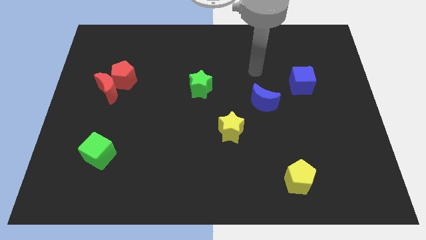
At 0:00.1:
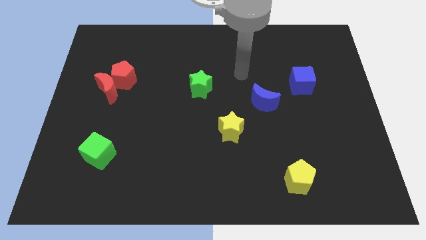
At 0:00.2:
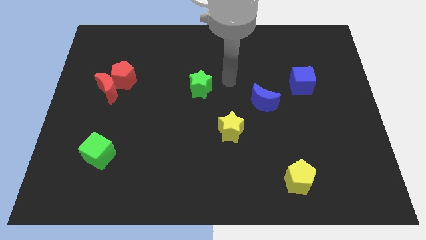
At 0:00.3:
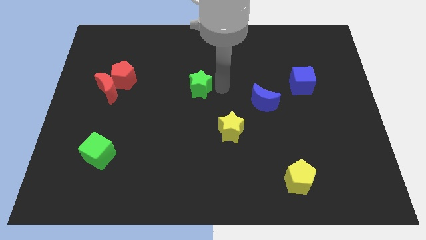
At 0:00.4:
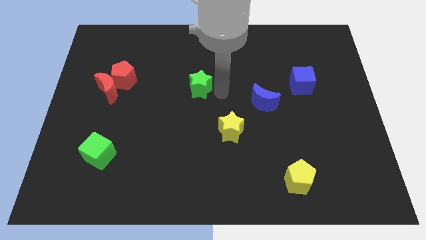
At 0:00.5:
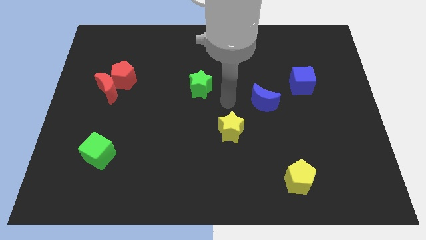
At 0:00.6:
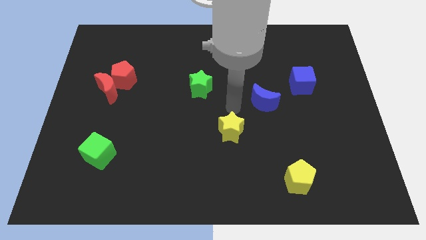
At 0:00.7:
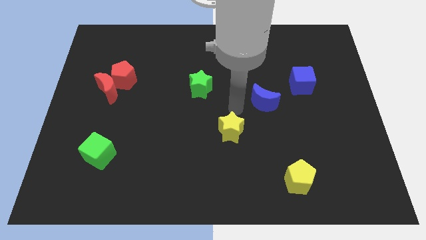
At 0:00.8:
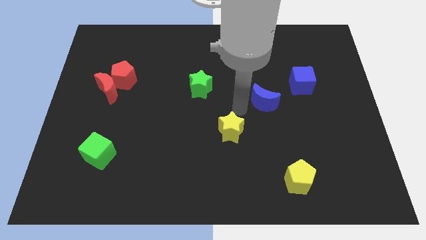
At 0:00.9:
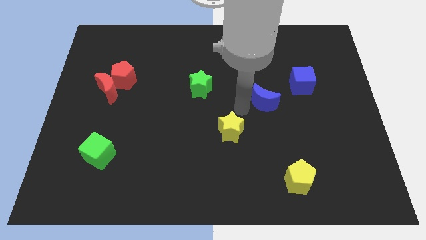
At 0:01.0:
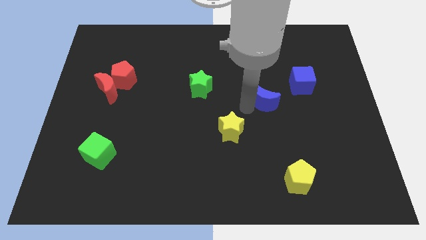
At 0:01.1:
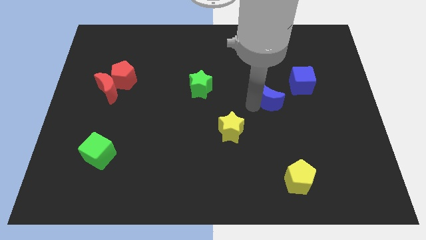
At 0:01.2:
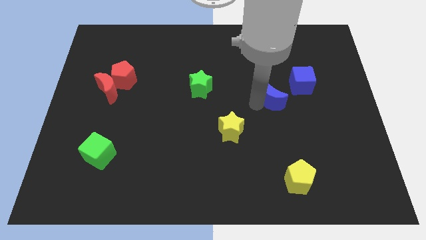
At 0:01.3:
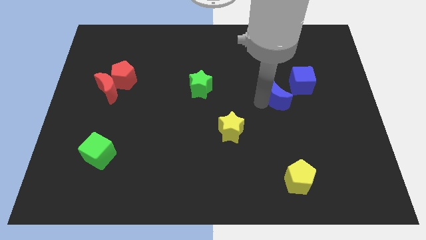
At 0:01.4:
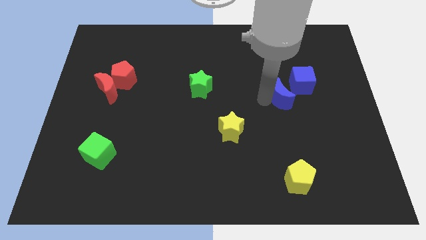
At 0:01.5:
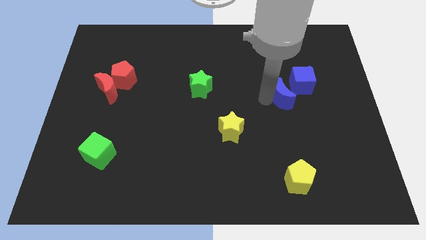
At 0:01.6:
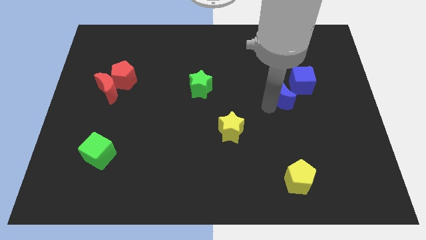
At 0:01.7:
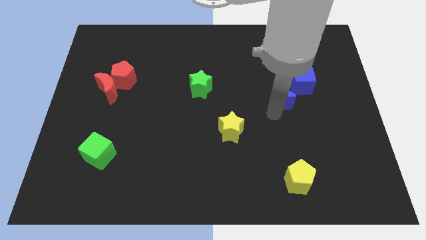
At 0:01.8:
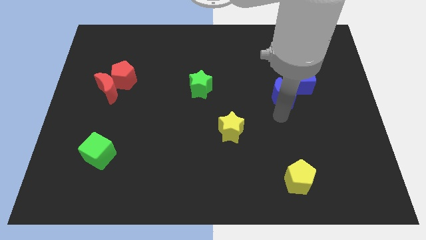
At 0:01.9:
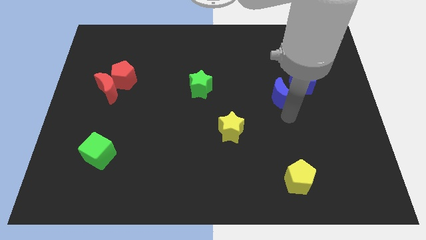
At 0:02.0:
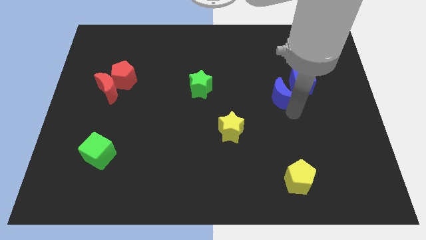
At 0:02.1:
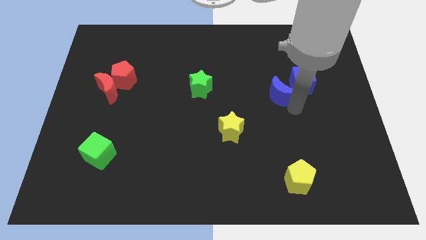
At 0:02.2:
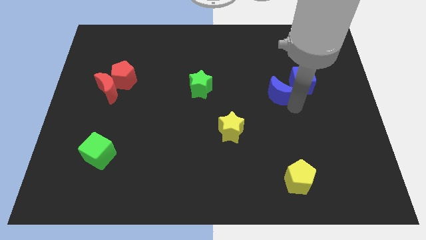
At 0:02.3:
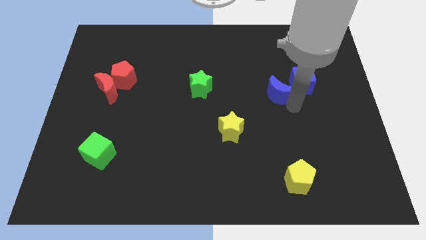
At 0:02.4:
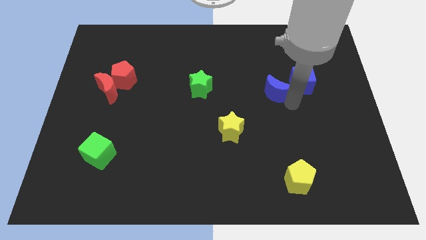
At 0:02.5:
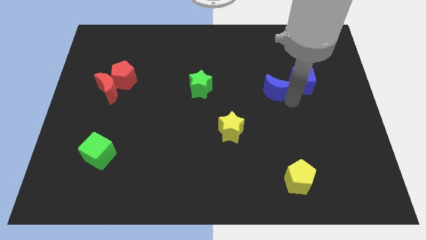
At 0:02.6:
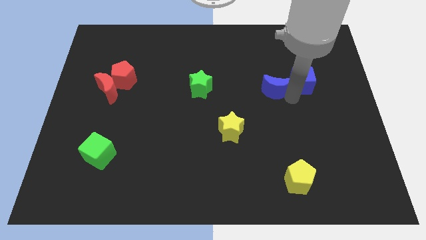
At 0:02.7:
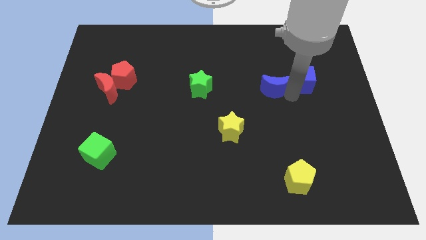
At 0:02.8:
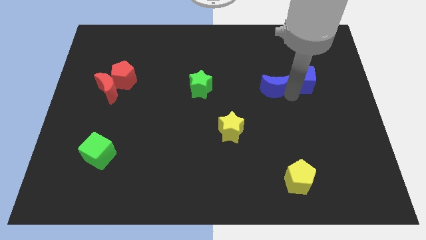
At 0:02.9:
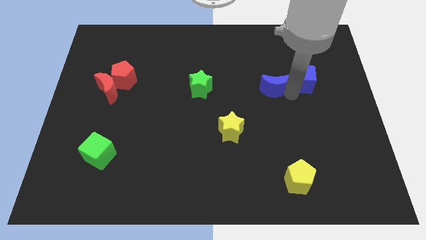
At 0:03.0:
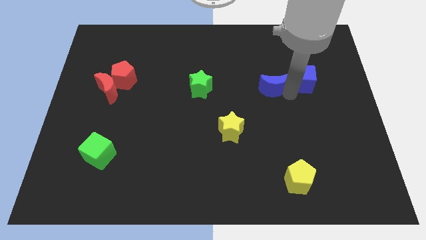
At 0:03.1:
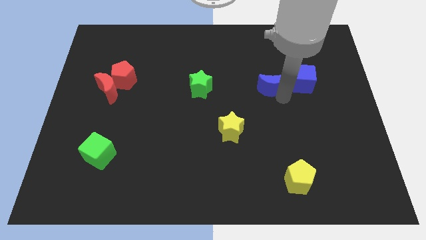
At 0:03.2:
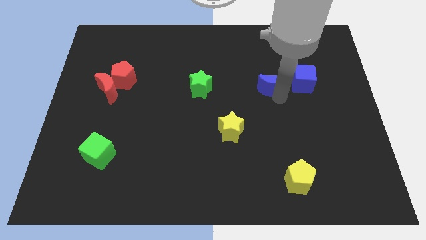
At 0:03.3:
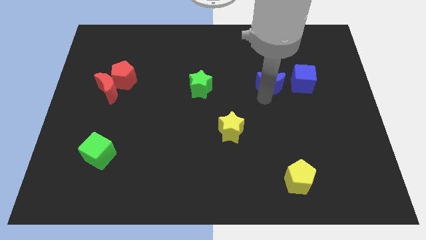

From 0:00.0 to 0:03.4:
place blue moon to the left of blue cube

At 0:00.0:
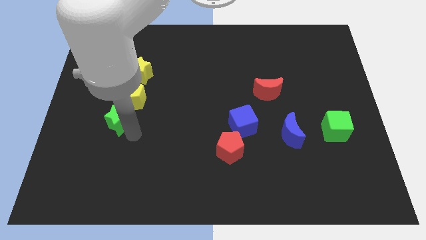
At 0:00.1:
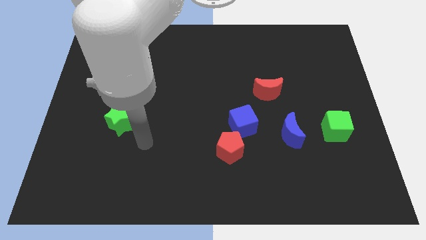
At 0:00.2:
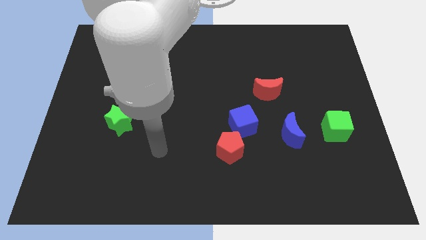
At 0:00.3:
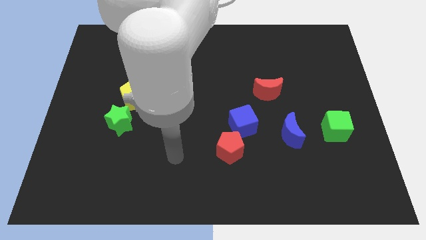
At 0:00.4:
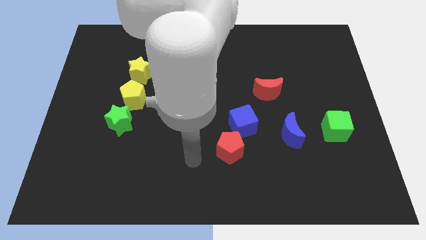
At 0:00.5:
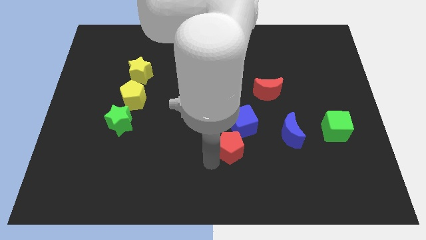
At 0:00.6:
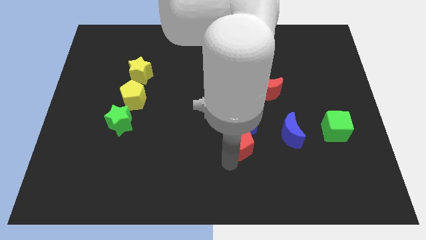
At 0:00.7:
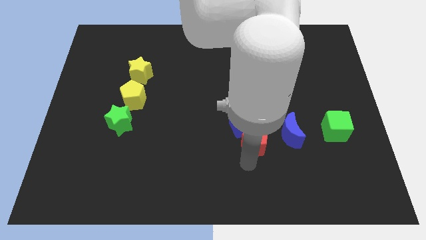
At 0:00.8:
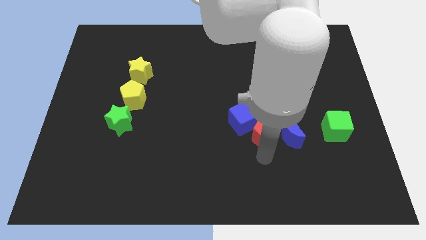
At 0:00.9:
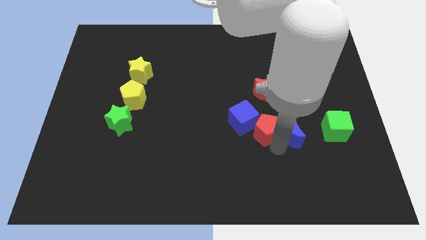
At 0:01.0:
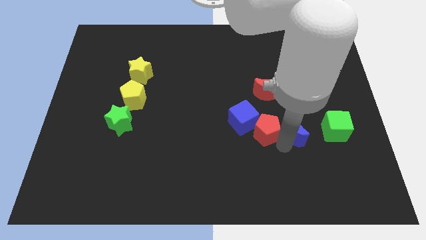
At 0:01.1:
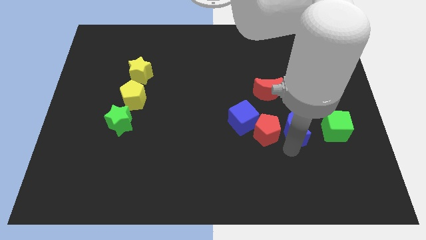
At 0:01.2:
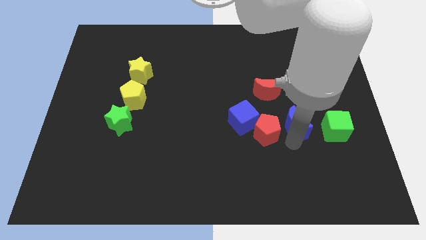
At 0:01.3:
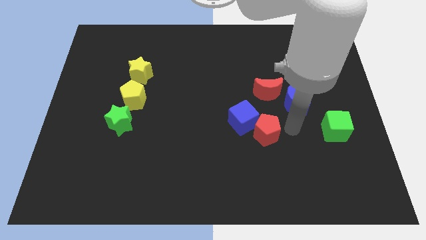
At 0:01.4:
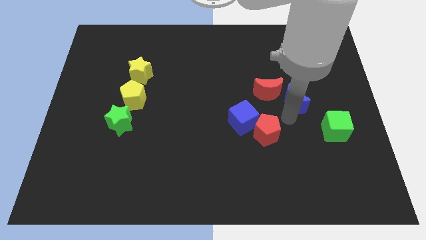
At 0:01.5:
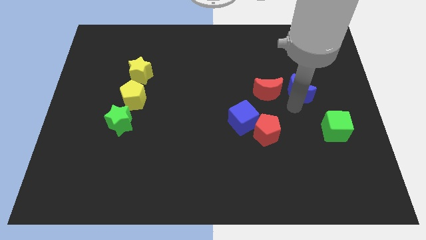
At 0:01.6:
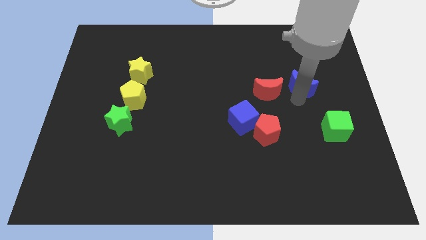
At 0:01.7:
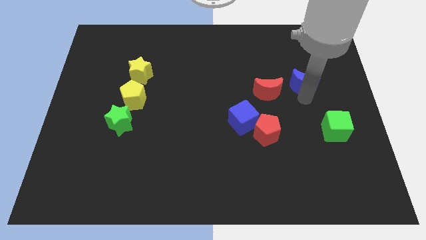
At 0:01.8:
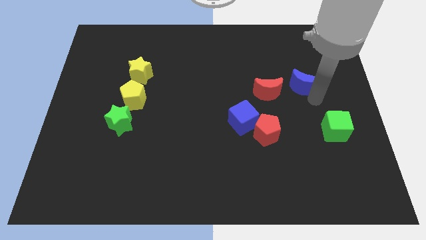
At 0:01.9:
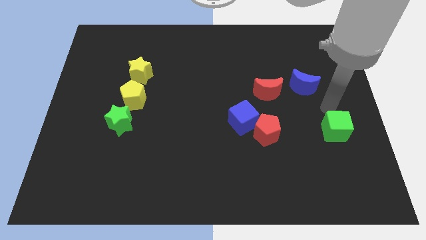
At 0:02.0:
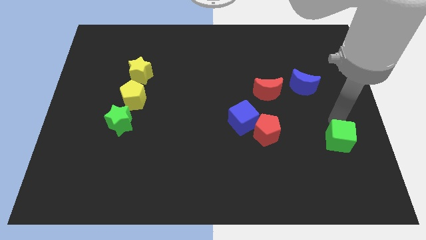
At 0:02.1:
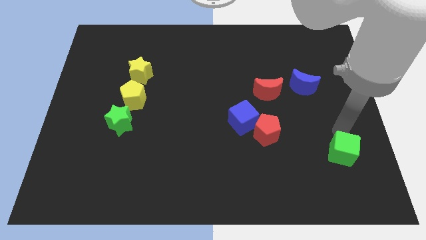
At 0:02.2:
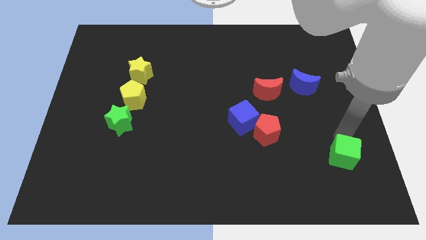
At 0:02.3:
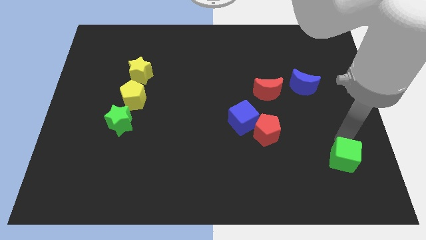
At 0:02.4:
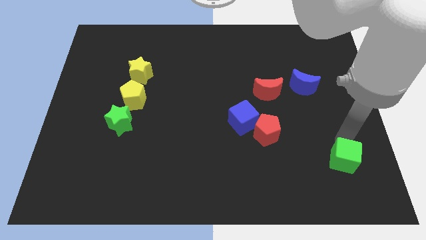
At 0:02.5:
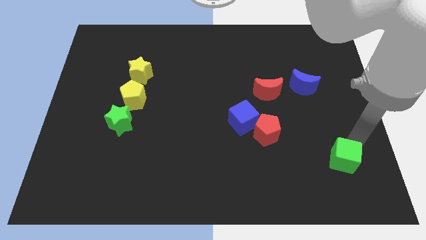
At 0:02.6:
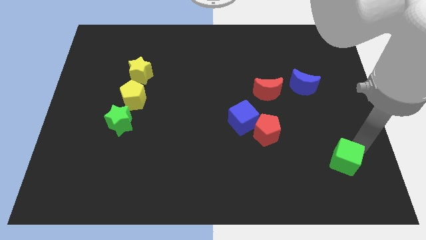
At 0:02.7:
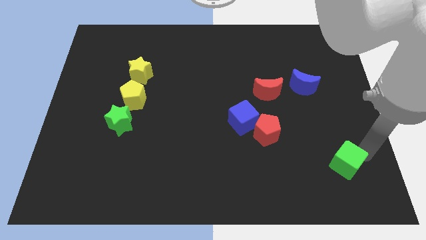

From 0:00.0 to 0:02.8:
move the arm away from the green star

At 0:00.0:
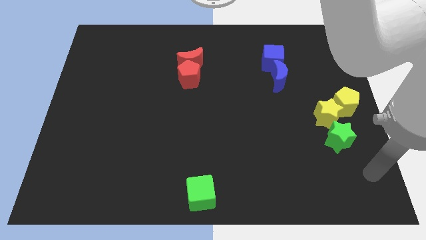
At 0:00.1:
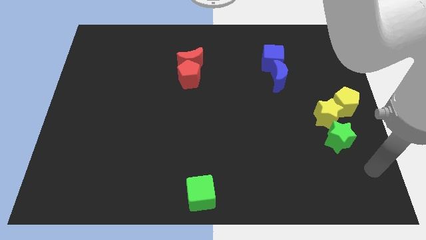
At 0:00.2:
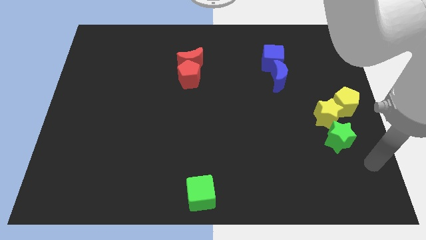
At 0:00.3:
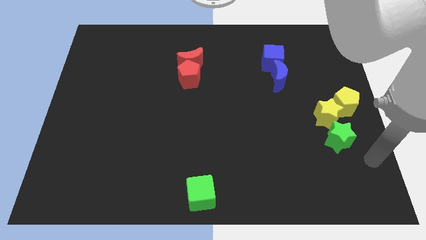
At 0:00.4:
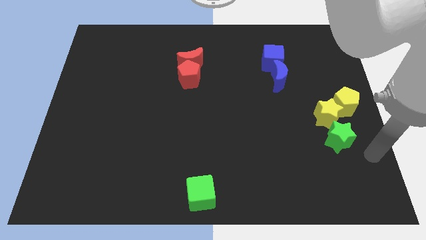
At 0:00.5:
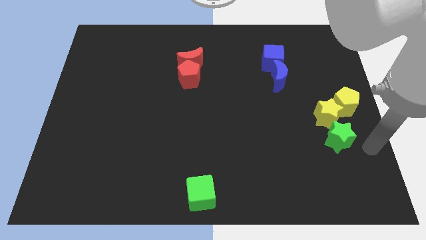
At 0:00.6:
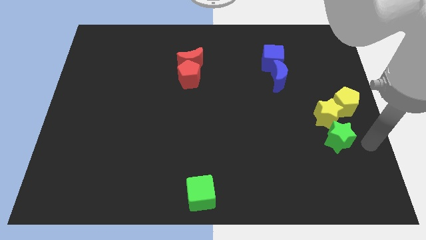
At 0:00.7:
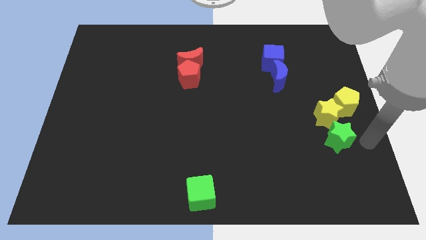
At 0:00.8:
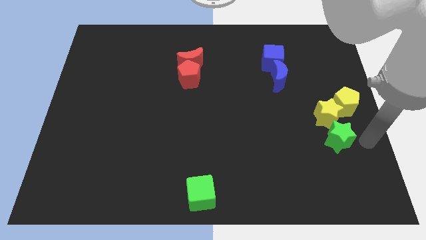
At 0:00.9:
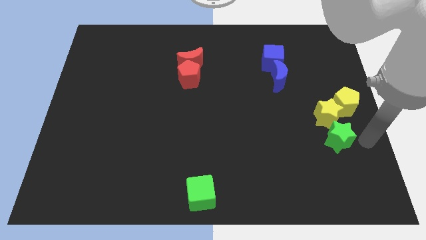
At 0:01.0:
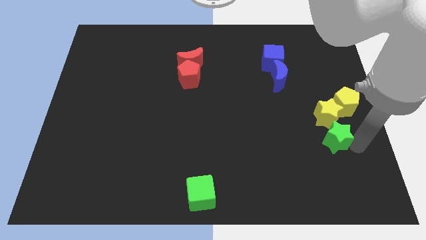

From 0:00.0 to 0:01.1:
move your arm to the right of green star

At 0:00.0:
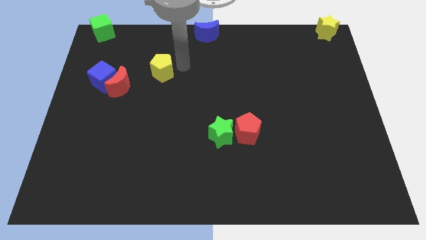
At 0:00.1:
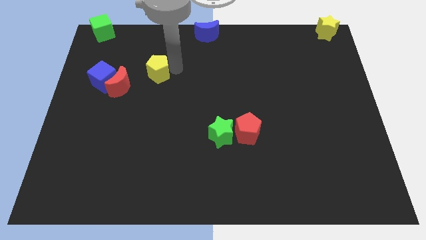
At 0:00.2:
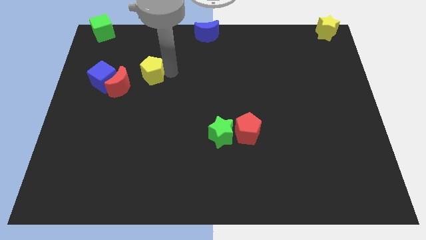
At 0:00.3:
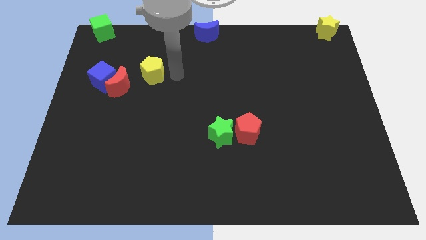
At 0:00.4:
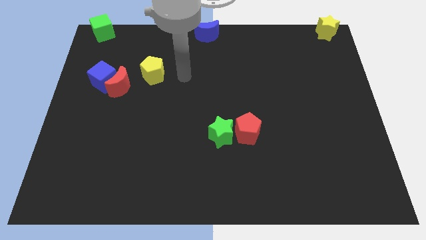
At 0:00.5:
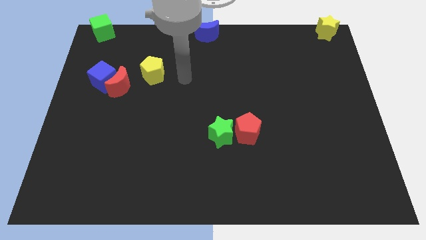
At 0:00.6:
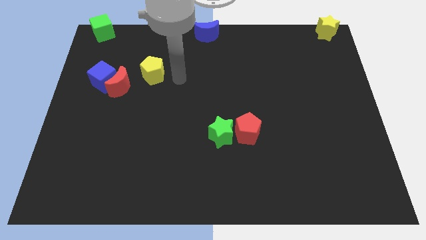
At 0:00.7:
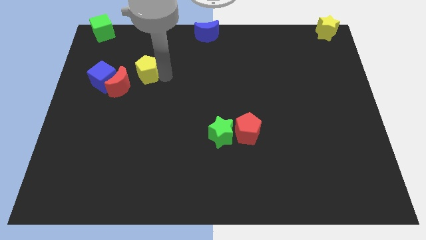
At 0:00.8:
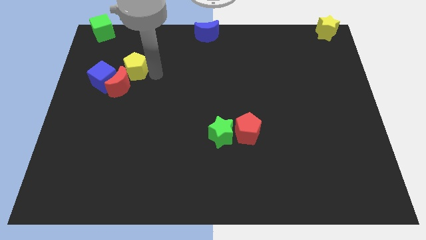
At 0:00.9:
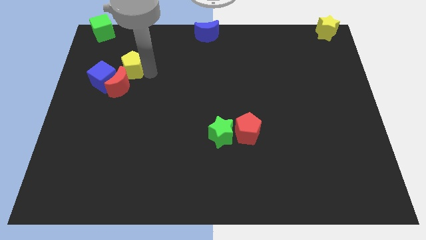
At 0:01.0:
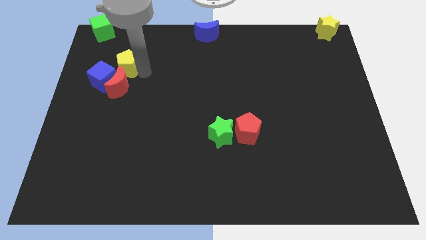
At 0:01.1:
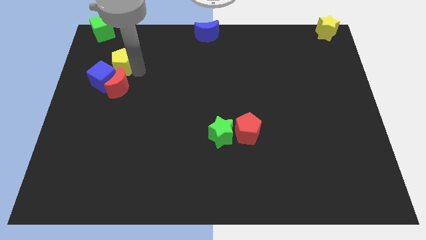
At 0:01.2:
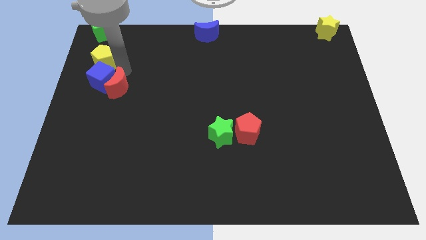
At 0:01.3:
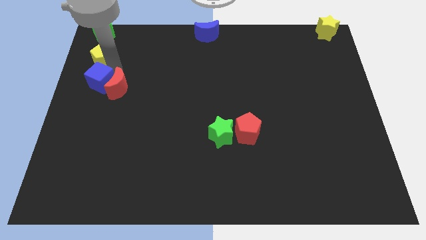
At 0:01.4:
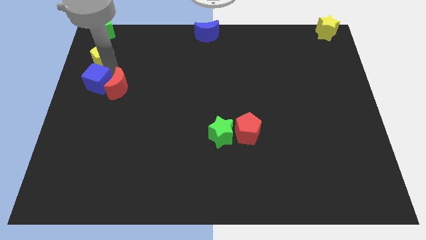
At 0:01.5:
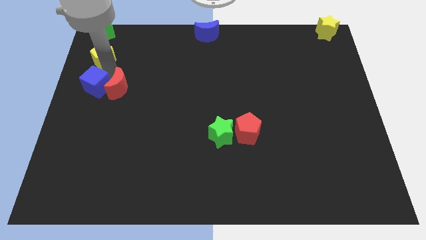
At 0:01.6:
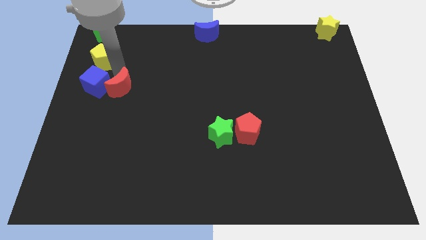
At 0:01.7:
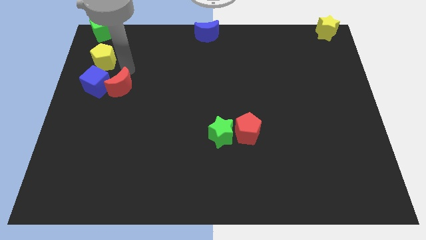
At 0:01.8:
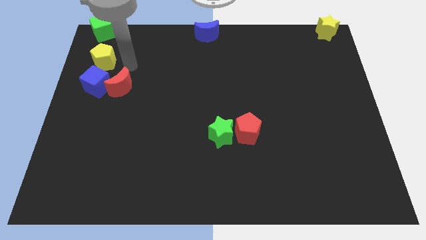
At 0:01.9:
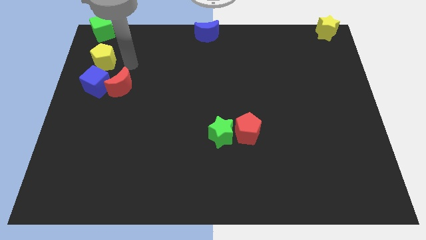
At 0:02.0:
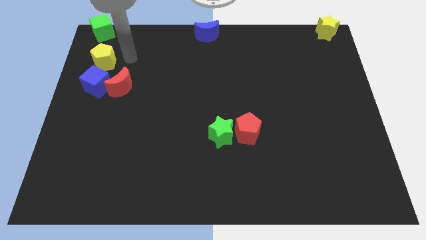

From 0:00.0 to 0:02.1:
place the yellow pentagon in between green cube and blue cube
